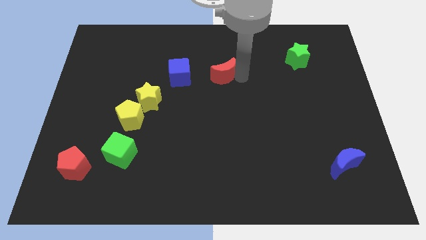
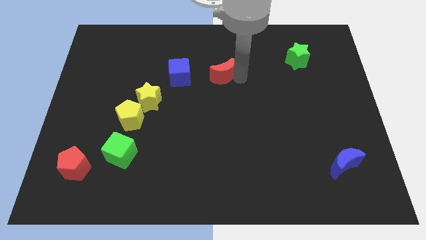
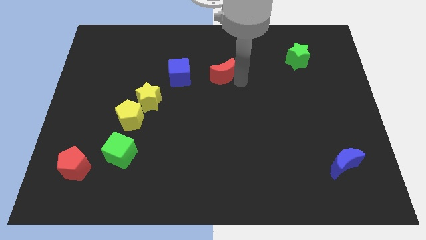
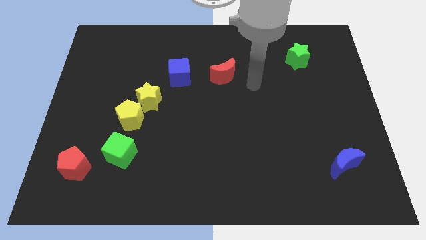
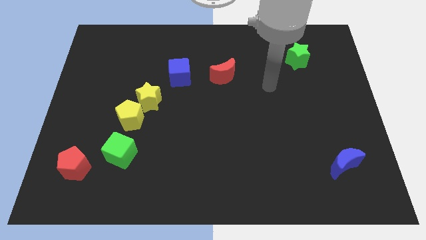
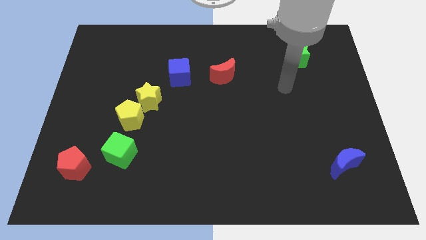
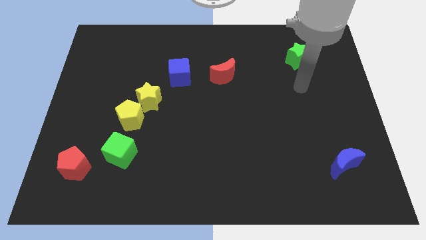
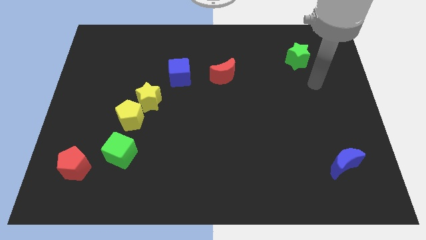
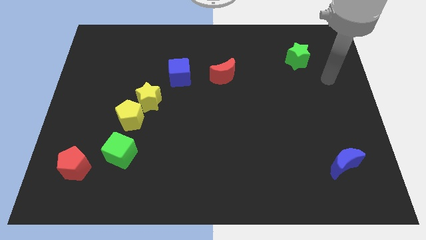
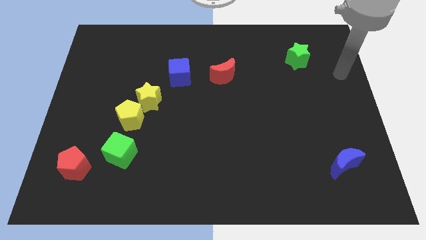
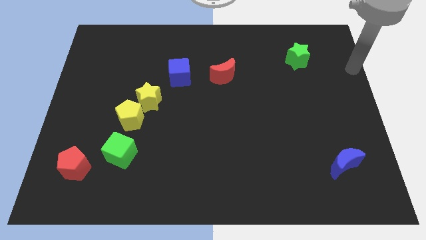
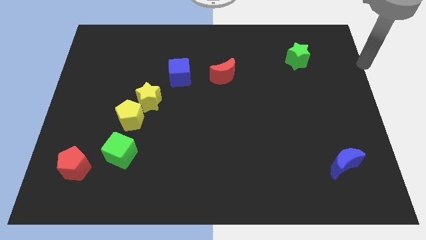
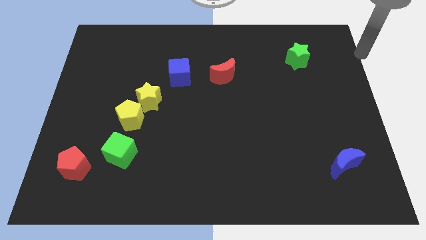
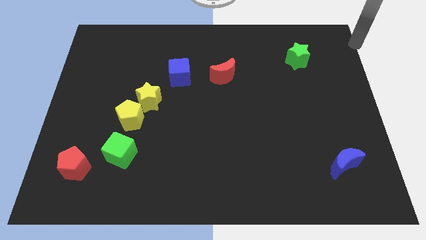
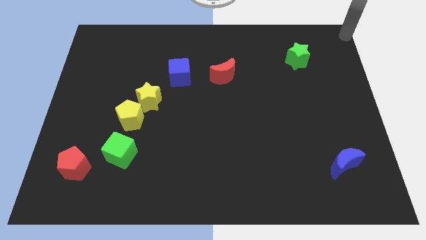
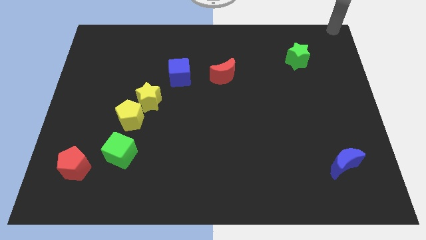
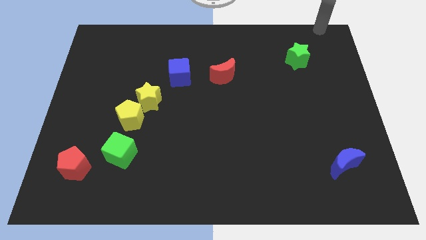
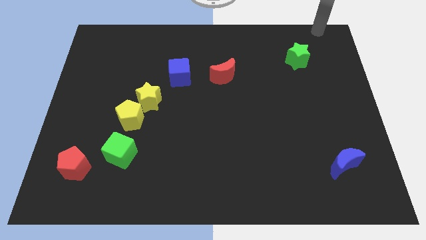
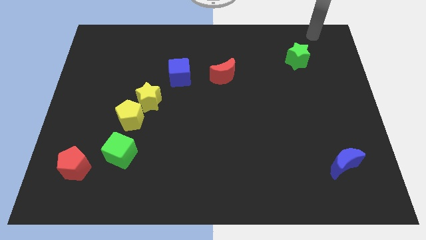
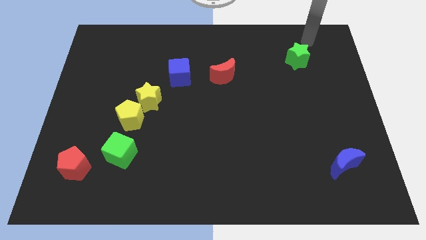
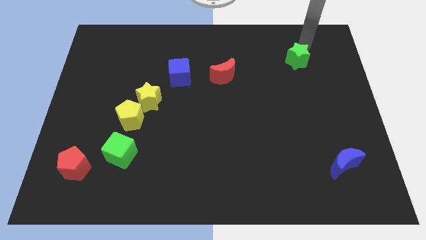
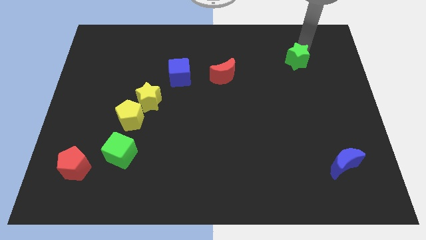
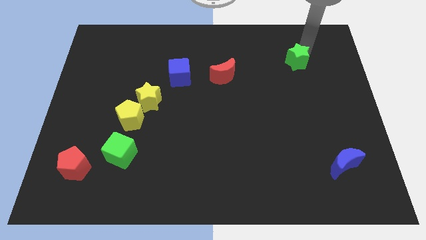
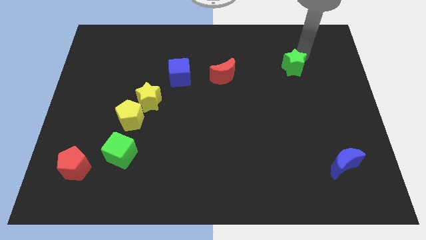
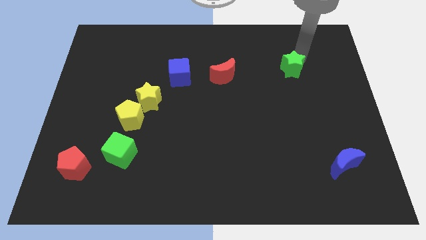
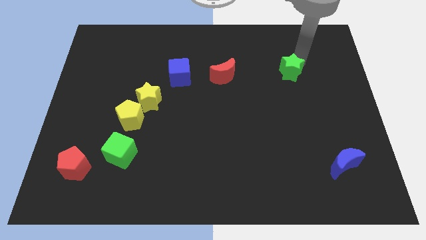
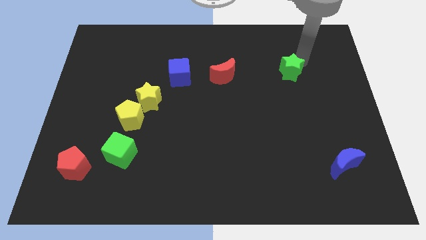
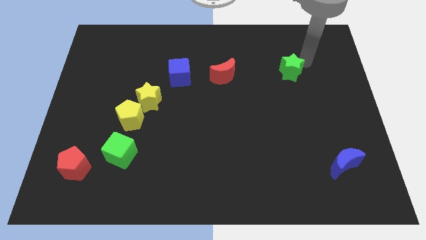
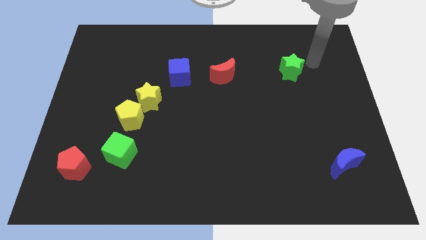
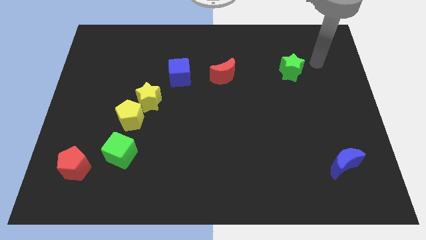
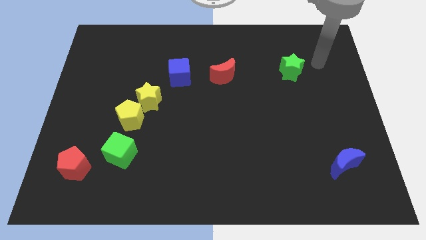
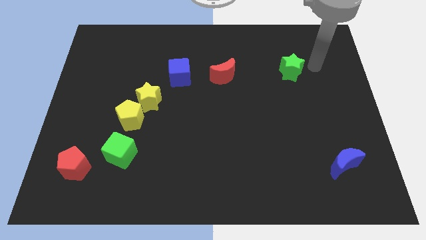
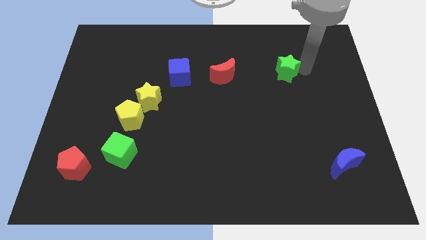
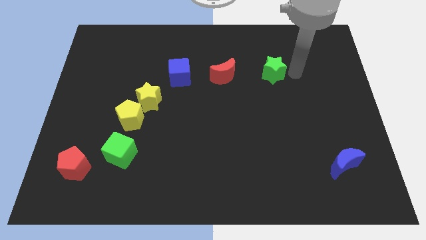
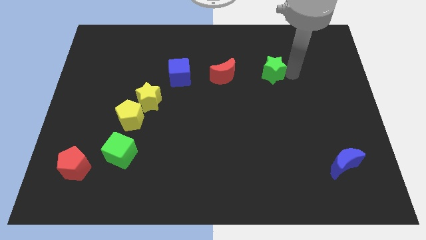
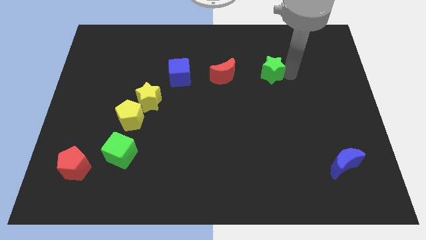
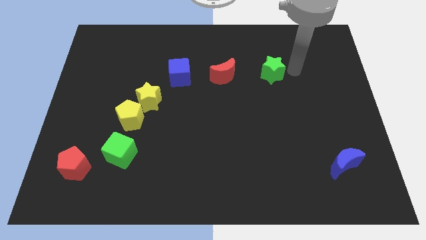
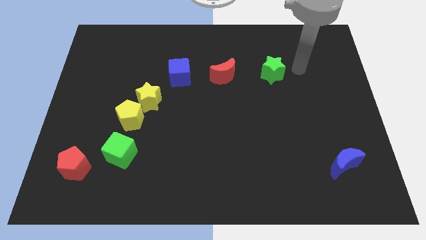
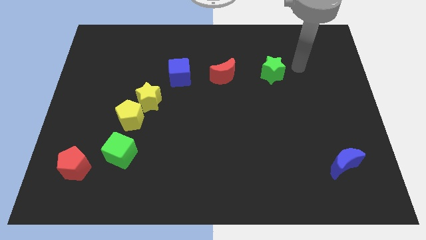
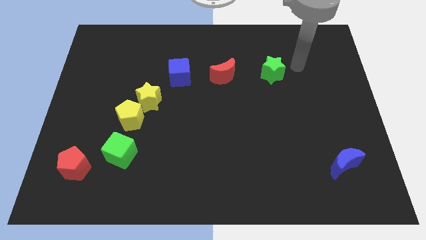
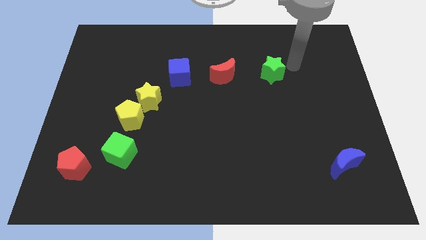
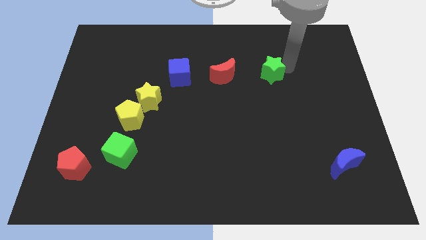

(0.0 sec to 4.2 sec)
place the green star right to the red moon

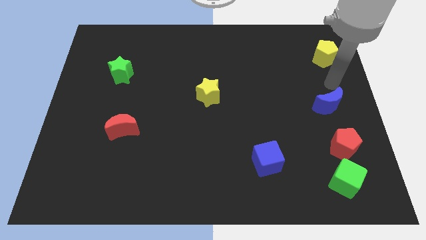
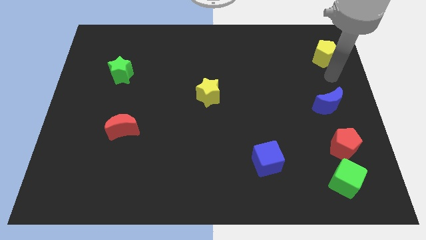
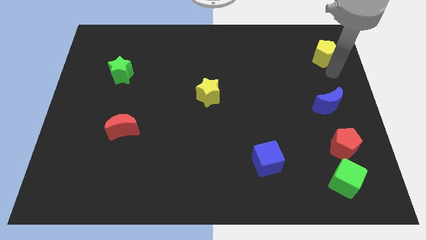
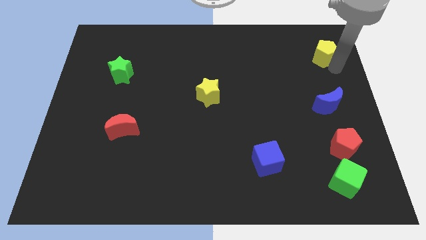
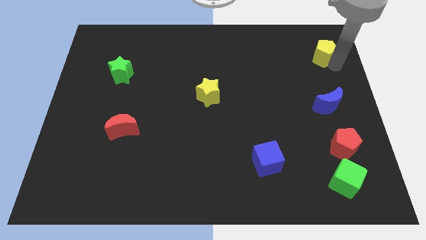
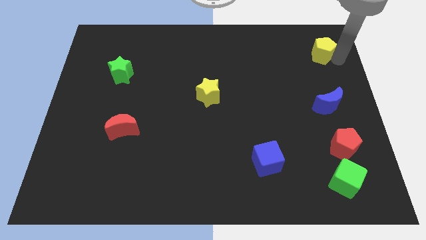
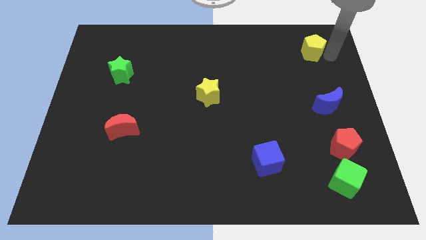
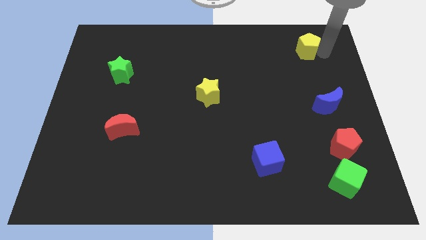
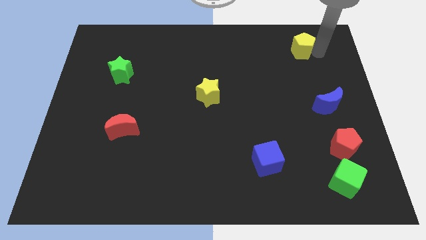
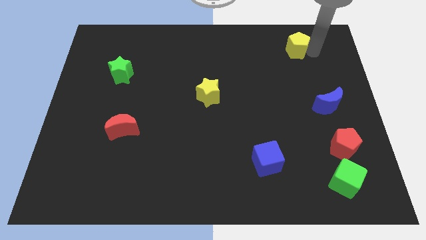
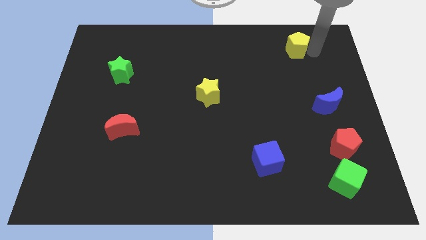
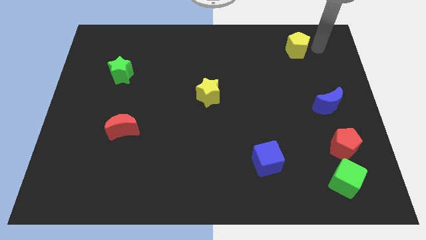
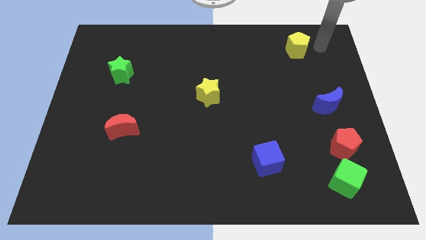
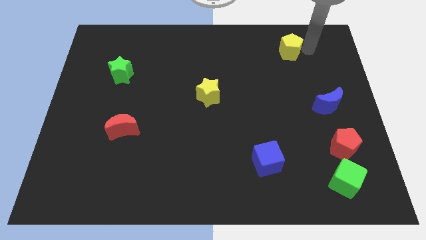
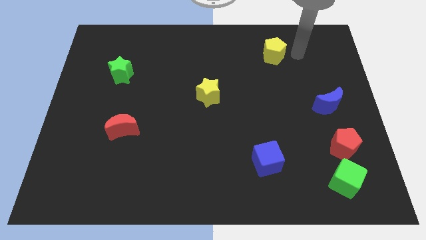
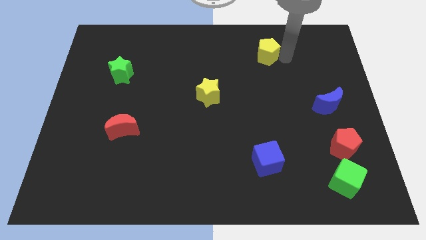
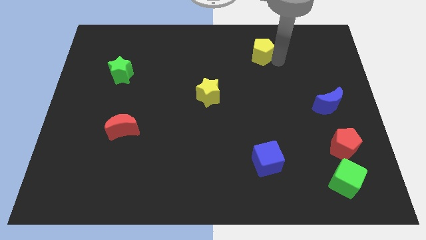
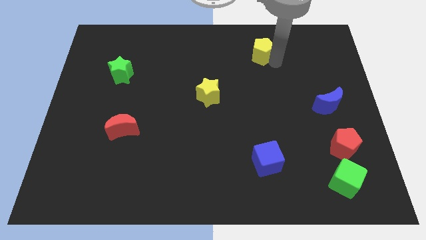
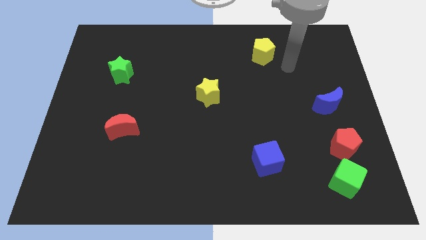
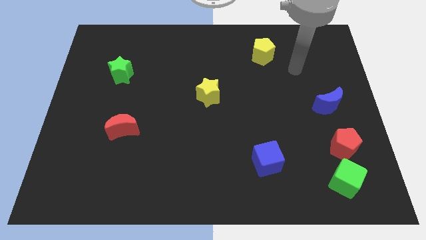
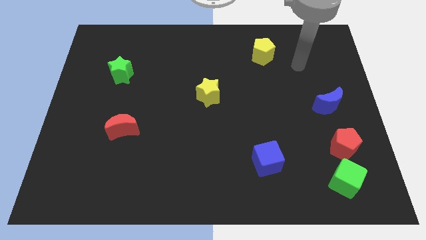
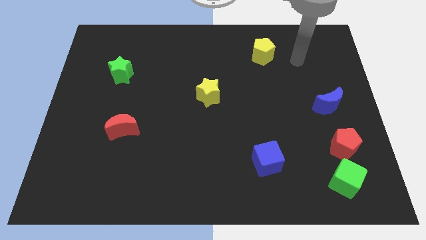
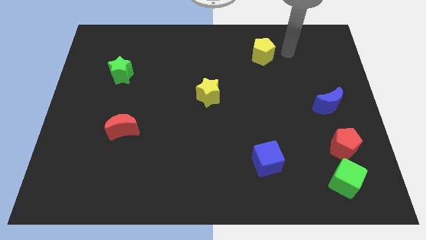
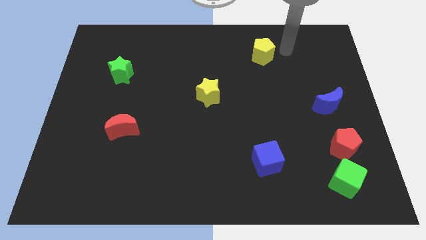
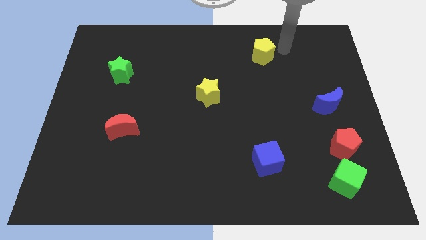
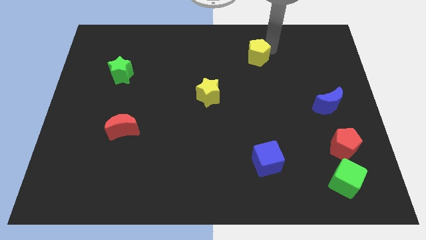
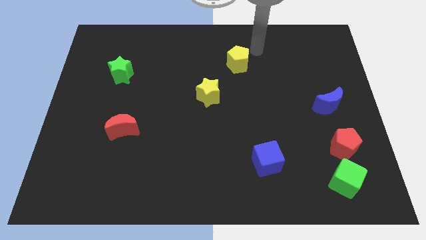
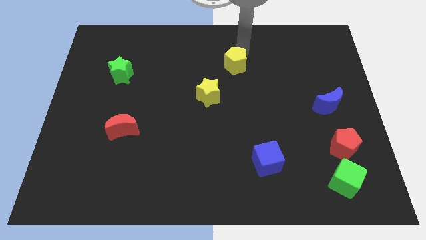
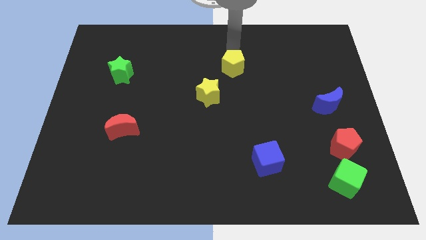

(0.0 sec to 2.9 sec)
move the yellow pentagon diagonally to the right side of the yellow star

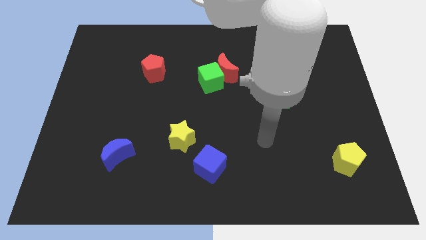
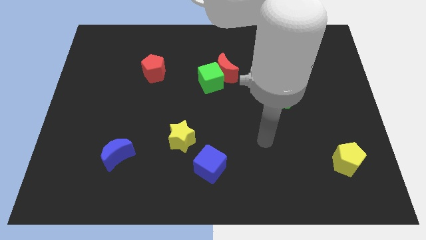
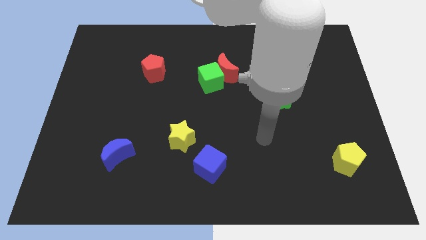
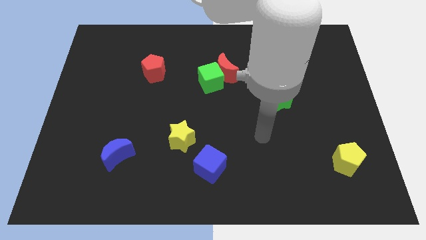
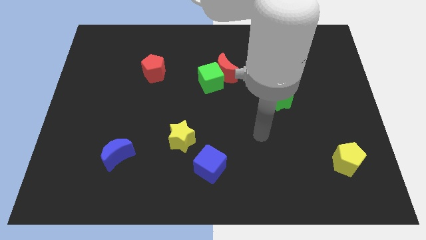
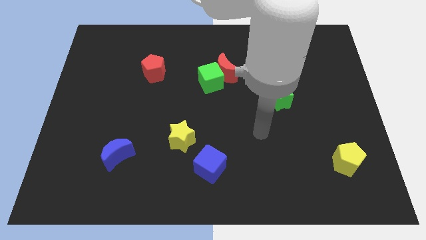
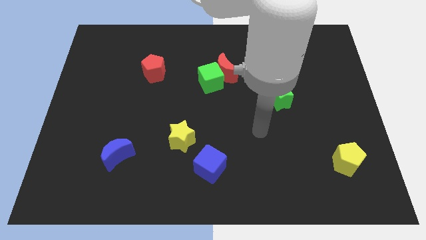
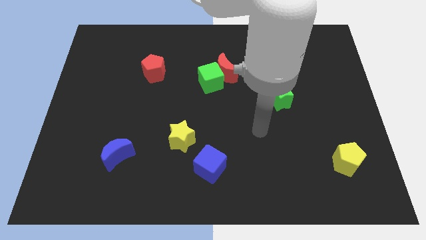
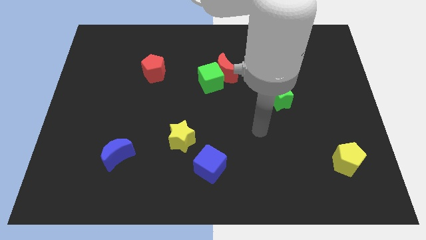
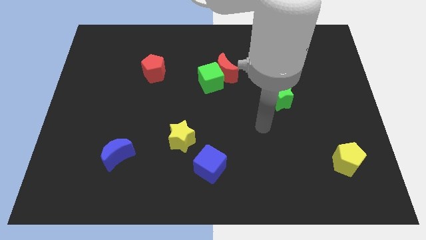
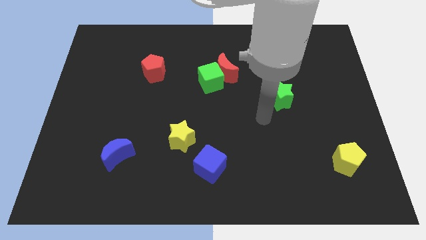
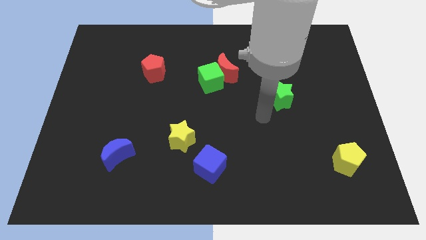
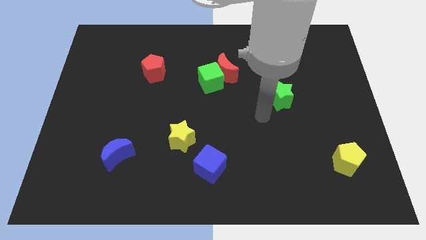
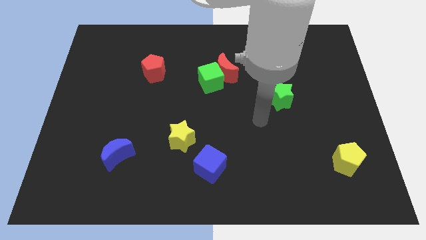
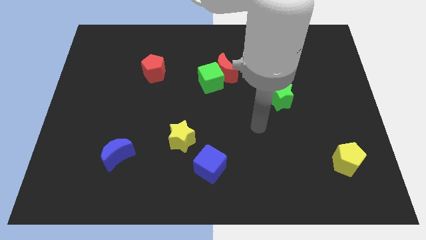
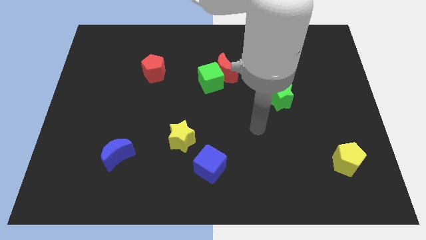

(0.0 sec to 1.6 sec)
move your arm towards the green star

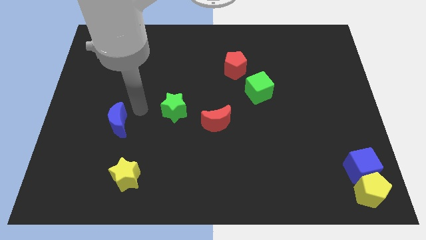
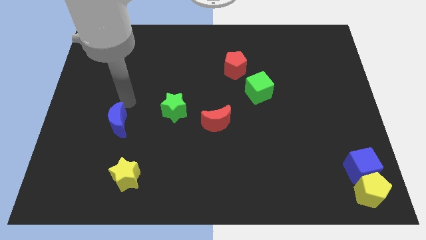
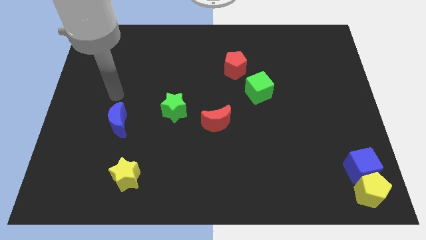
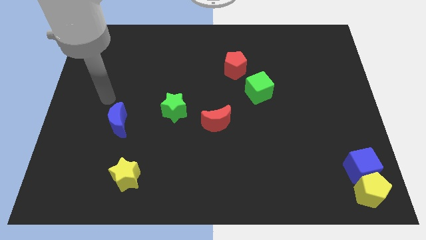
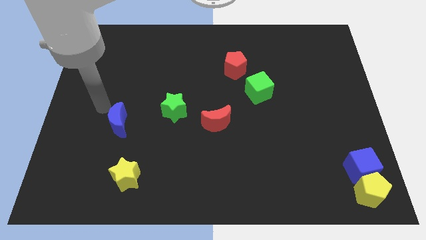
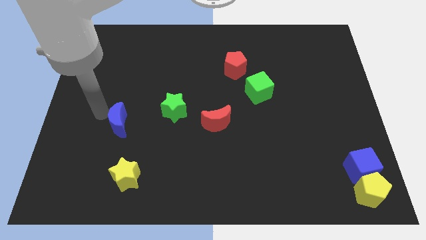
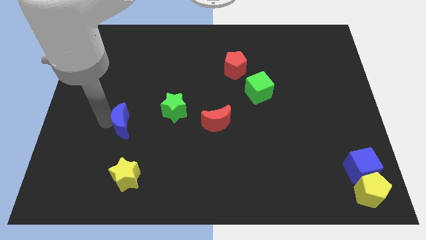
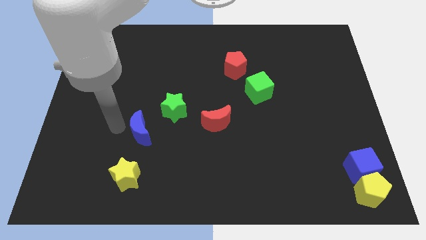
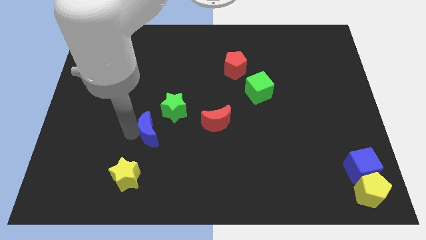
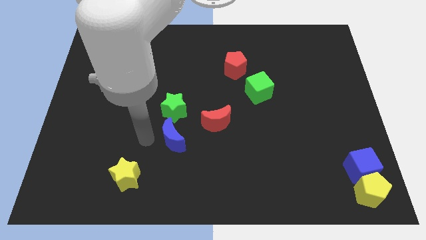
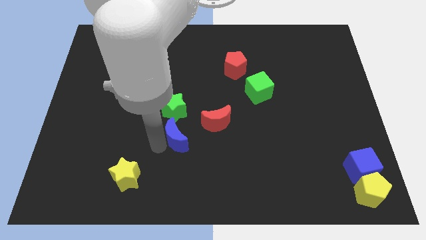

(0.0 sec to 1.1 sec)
push the blue moon below the green star
